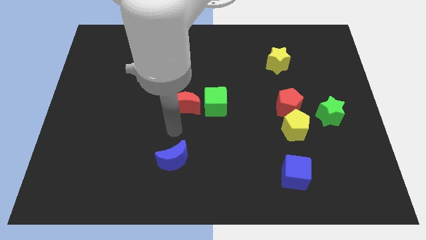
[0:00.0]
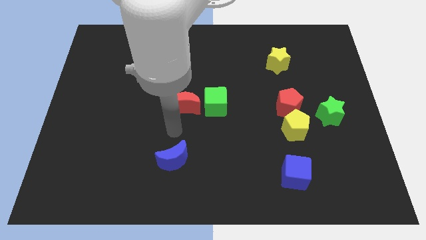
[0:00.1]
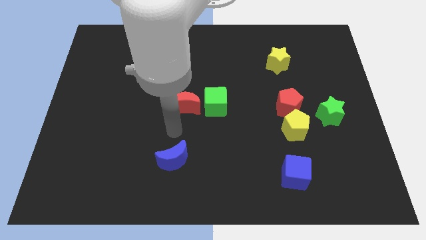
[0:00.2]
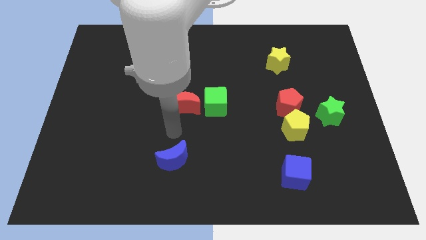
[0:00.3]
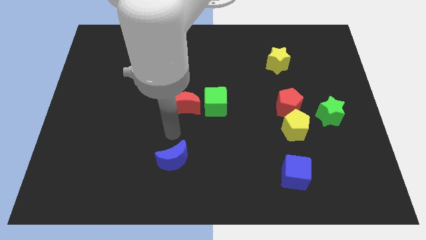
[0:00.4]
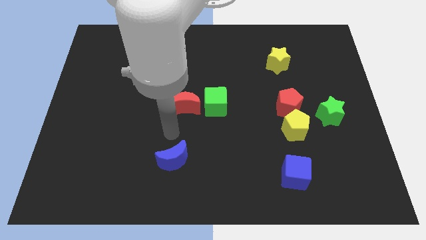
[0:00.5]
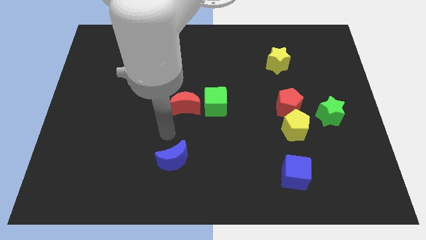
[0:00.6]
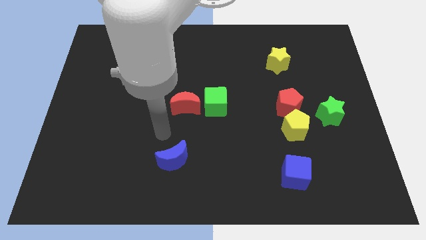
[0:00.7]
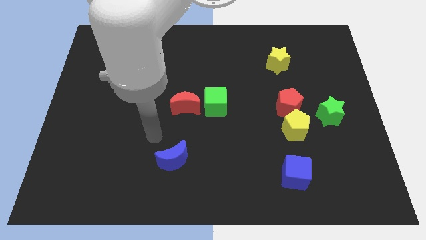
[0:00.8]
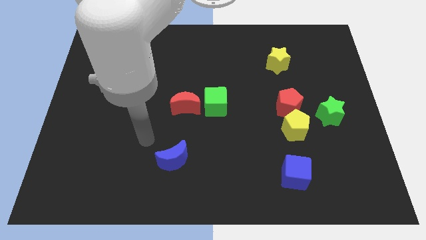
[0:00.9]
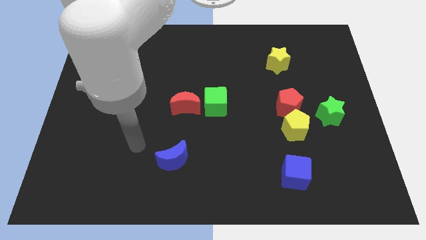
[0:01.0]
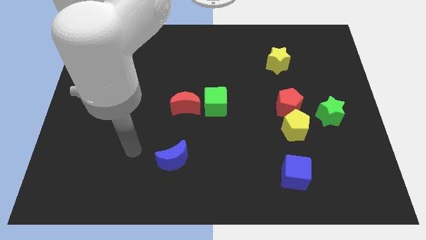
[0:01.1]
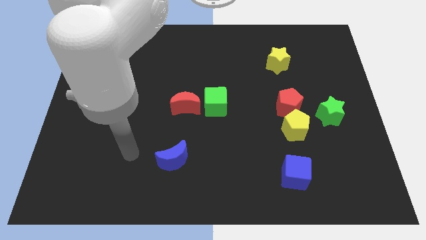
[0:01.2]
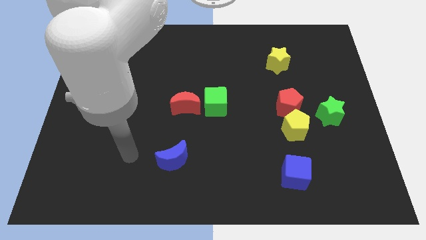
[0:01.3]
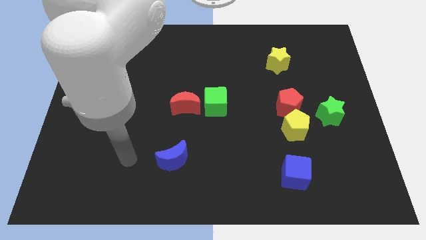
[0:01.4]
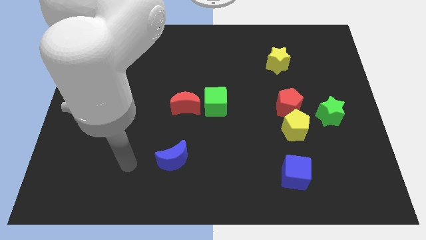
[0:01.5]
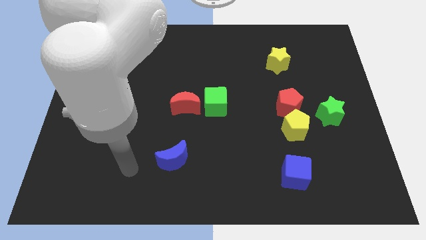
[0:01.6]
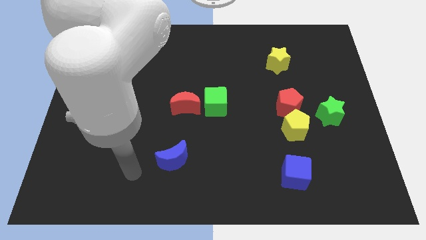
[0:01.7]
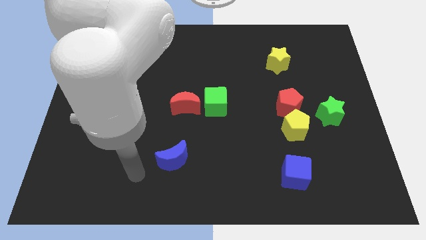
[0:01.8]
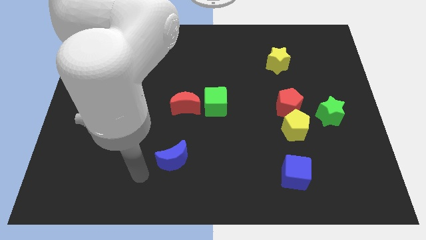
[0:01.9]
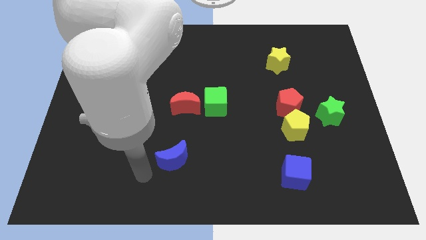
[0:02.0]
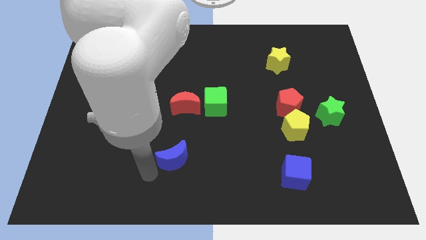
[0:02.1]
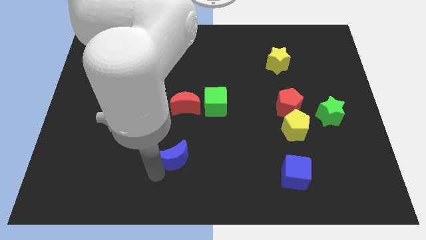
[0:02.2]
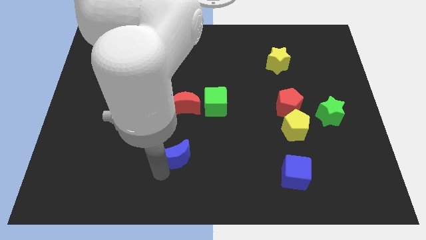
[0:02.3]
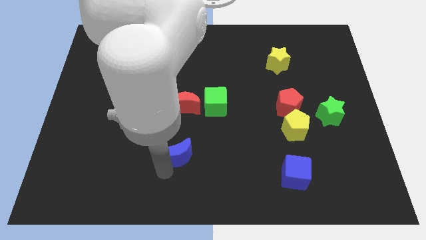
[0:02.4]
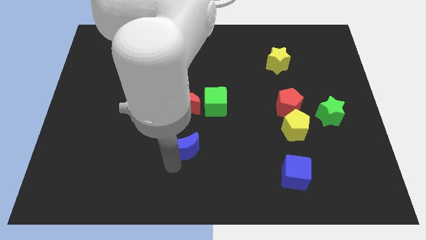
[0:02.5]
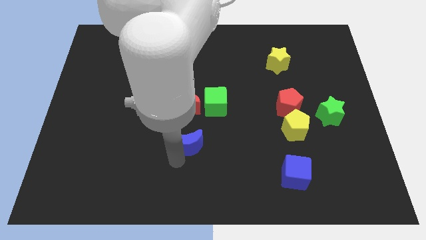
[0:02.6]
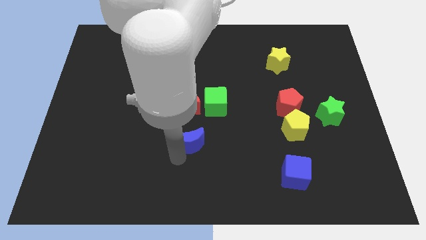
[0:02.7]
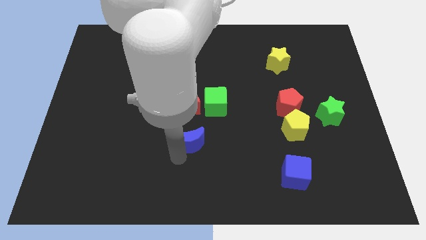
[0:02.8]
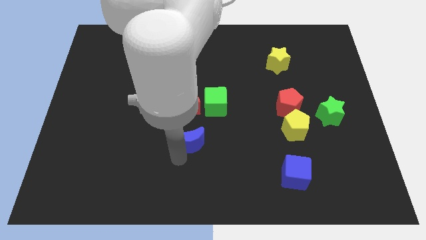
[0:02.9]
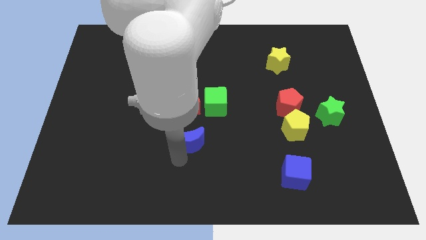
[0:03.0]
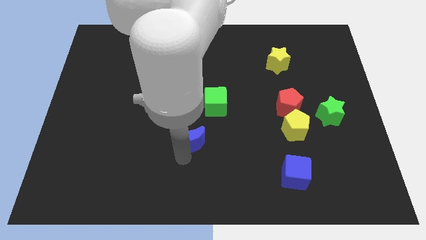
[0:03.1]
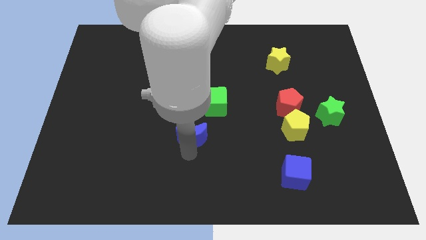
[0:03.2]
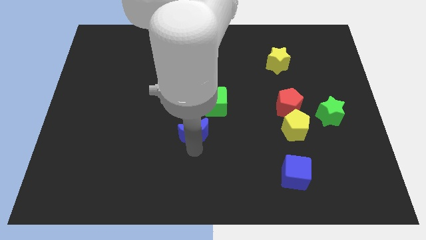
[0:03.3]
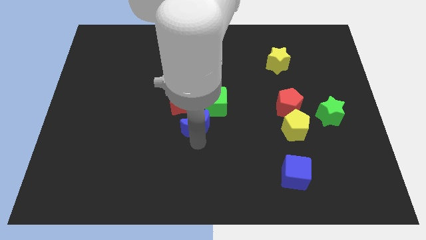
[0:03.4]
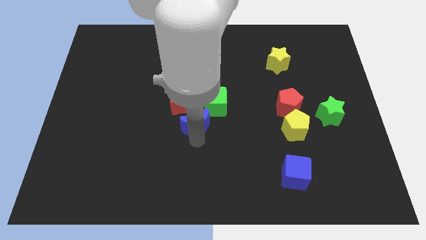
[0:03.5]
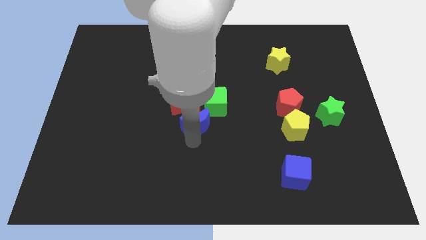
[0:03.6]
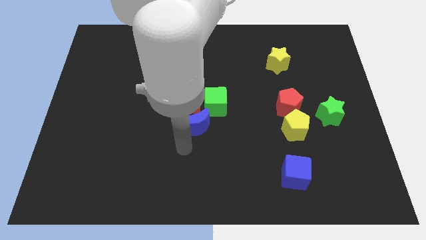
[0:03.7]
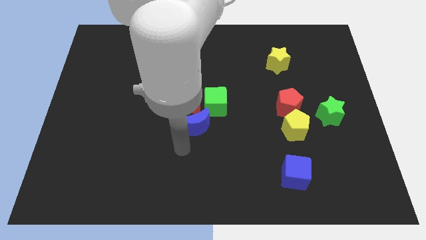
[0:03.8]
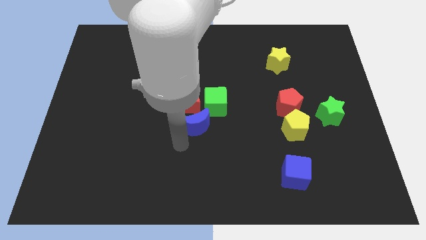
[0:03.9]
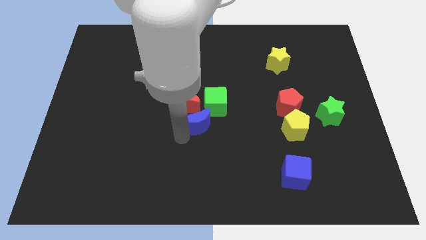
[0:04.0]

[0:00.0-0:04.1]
push blue crescent towards the red crescent

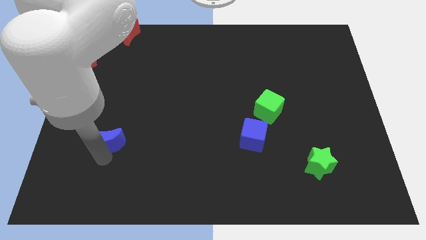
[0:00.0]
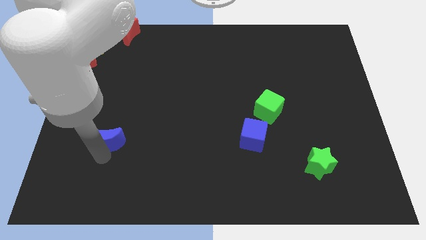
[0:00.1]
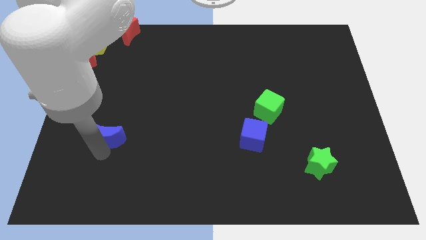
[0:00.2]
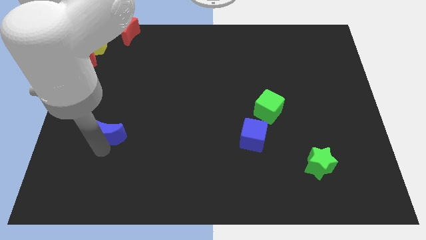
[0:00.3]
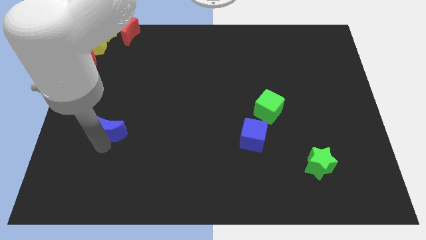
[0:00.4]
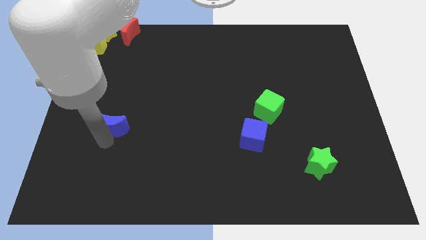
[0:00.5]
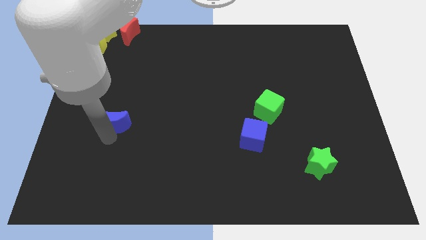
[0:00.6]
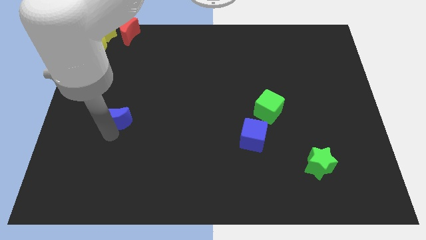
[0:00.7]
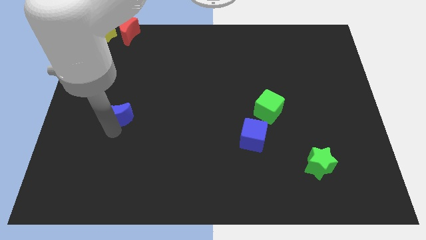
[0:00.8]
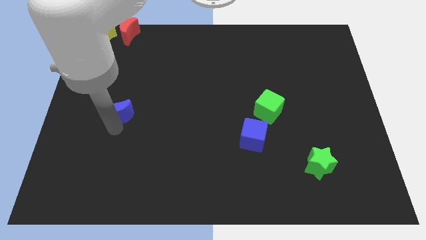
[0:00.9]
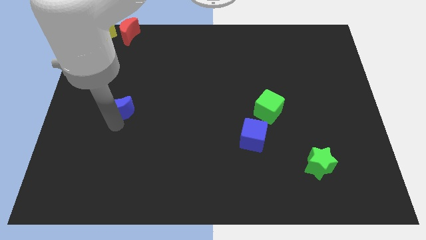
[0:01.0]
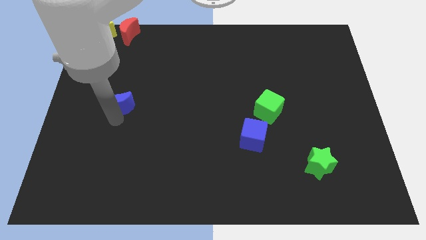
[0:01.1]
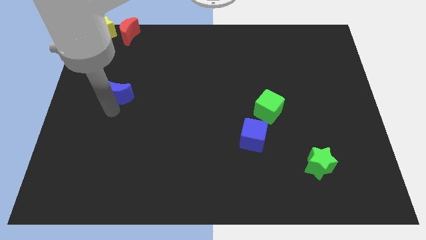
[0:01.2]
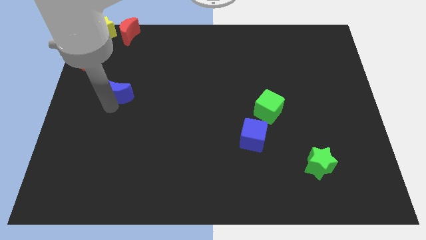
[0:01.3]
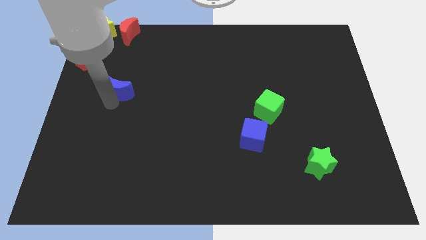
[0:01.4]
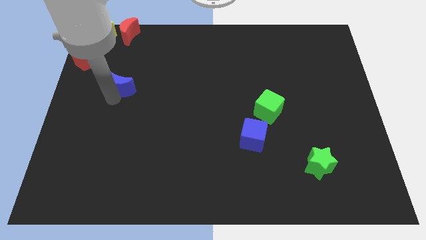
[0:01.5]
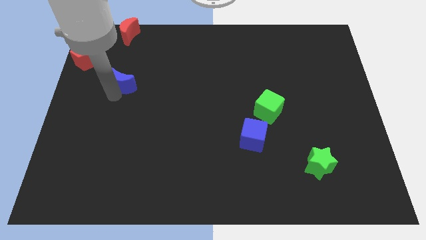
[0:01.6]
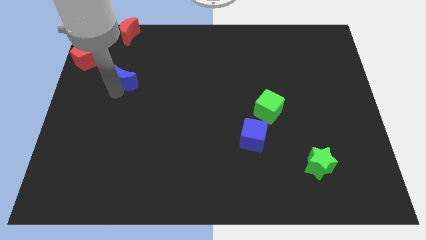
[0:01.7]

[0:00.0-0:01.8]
push the blue moon towards top

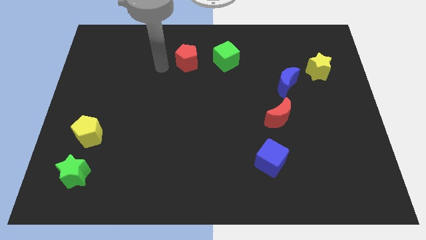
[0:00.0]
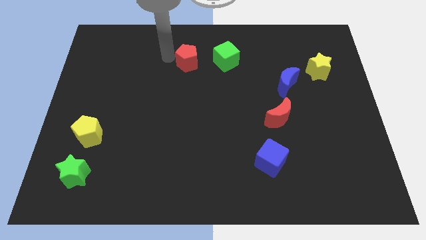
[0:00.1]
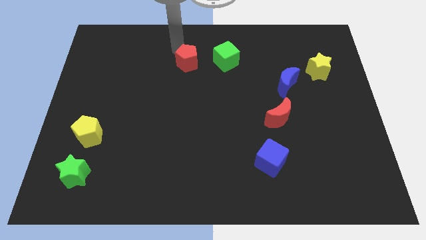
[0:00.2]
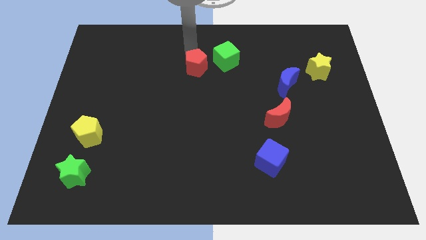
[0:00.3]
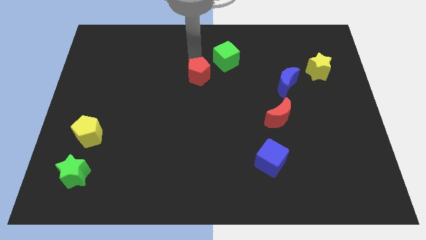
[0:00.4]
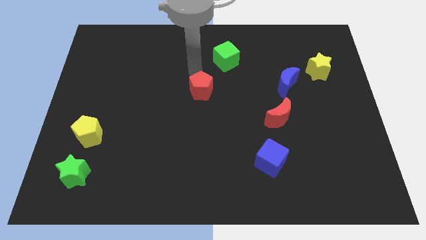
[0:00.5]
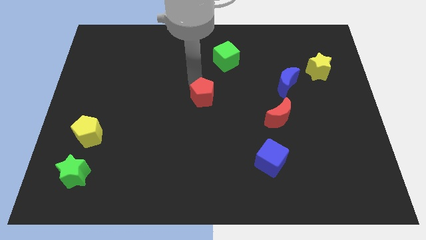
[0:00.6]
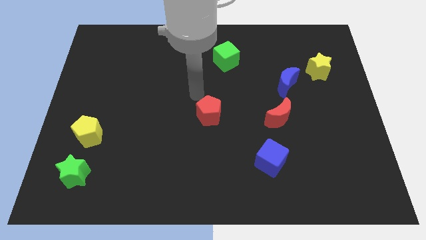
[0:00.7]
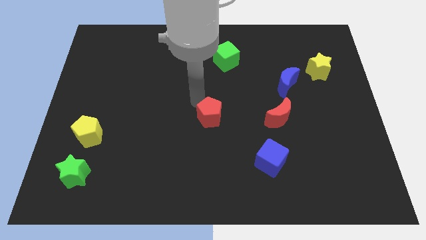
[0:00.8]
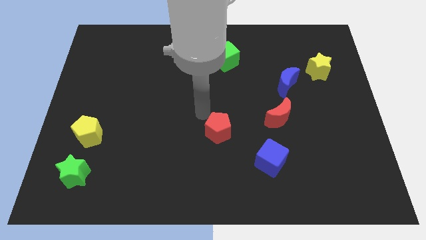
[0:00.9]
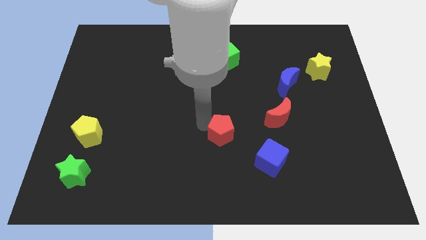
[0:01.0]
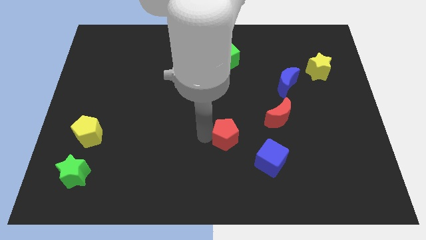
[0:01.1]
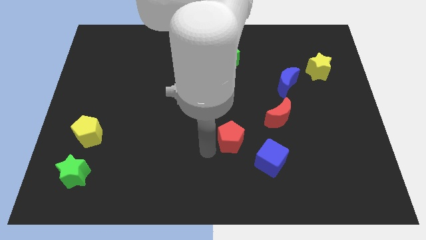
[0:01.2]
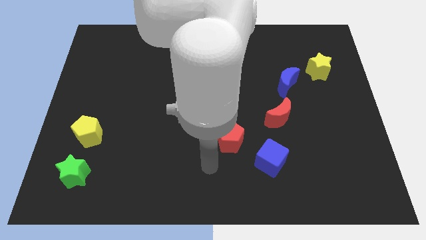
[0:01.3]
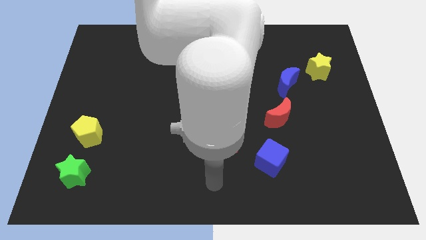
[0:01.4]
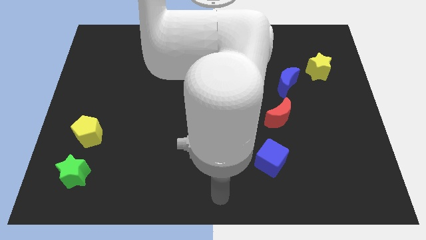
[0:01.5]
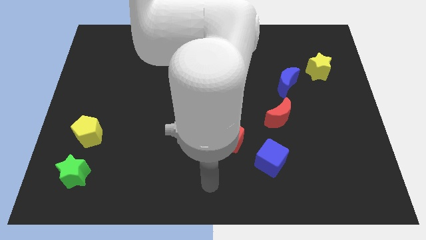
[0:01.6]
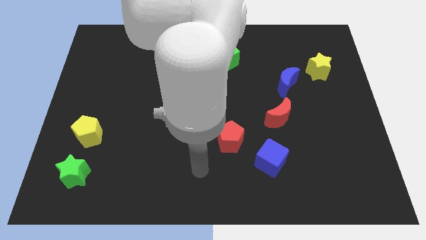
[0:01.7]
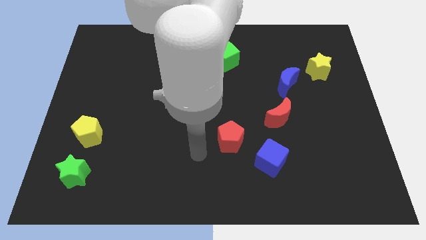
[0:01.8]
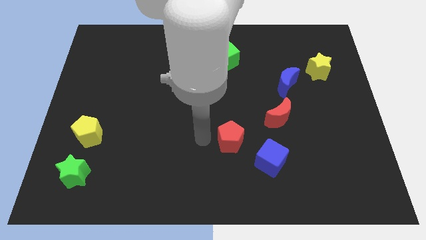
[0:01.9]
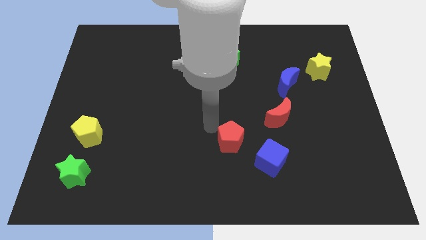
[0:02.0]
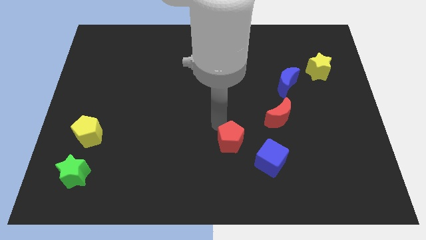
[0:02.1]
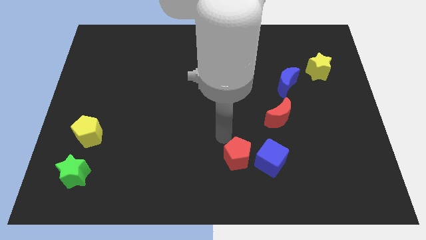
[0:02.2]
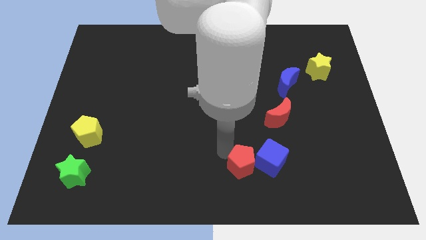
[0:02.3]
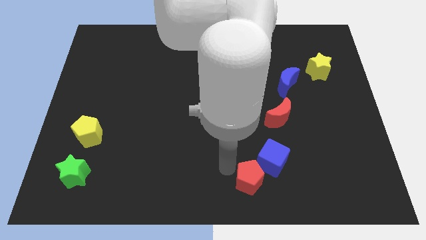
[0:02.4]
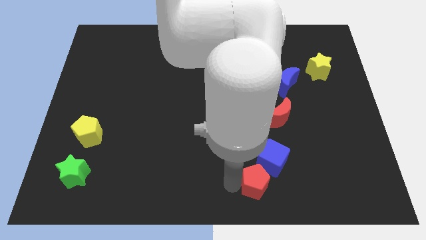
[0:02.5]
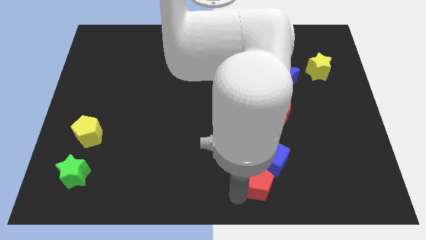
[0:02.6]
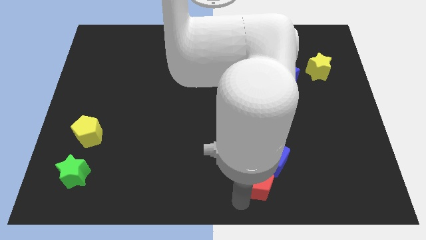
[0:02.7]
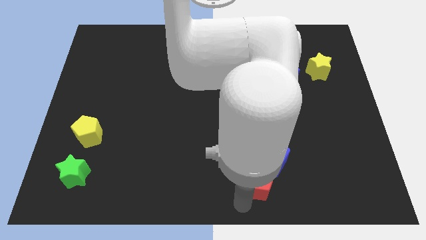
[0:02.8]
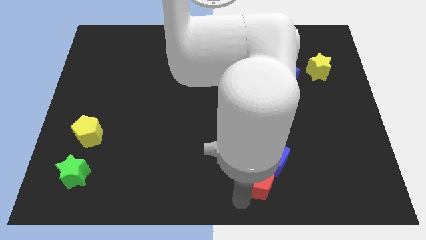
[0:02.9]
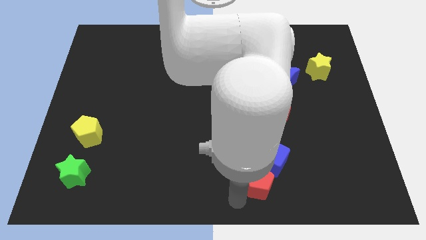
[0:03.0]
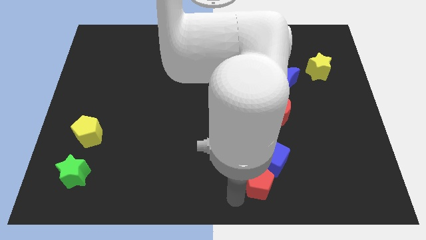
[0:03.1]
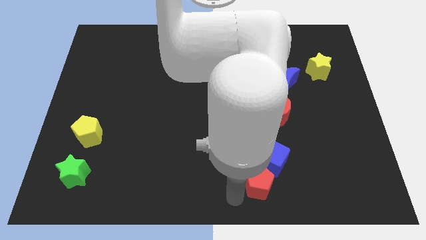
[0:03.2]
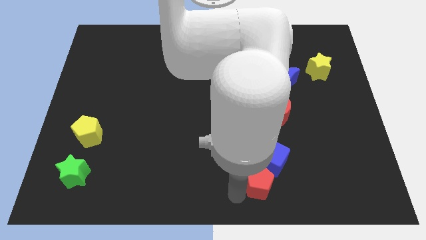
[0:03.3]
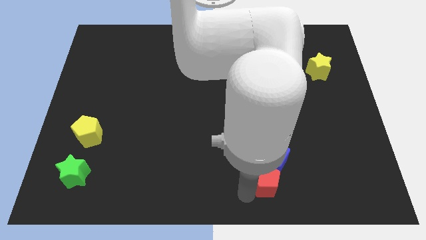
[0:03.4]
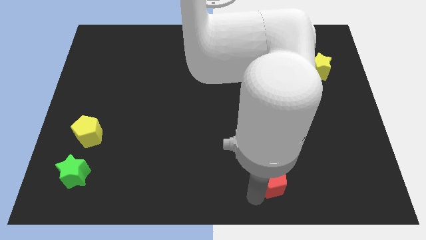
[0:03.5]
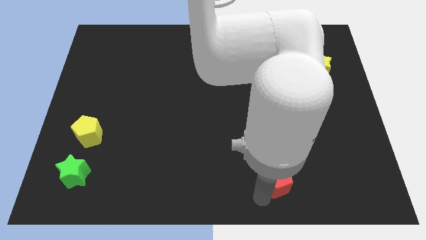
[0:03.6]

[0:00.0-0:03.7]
move the red pentagon to the bottom of the blue cube
